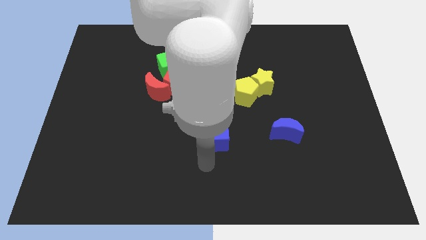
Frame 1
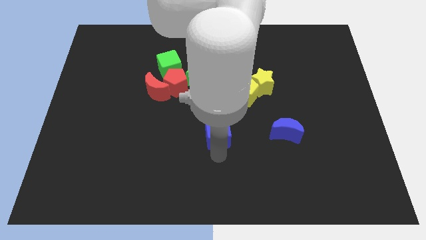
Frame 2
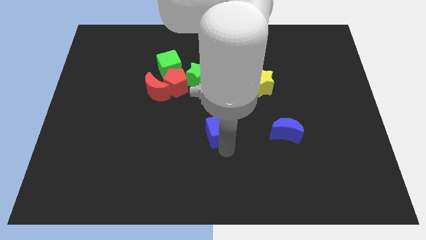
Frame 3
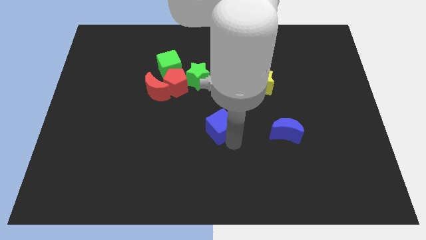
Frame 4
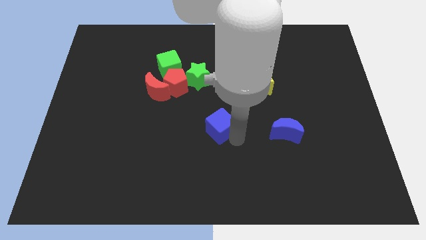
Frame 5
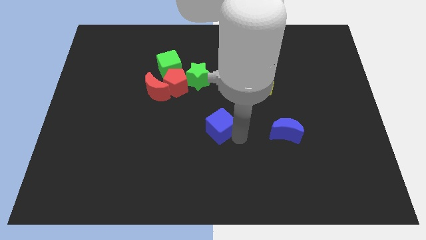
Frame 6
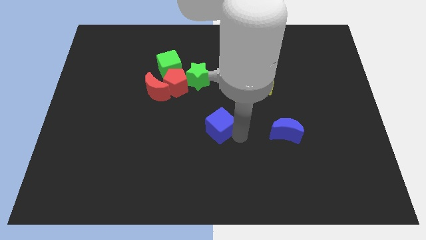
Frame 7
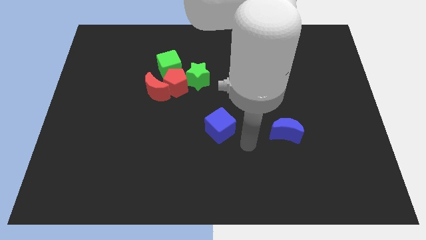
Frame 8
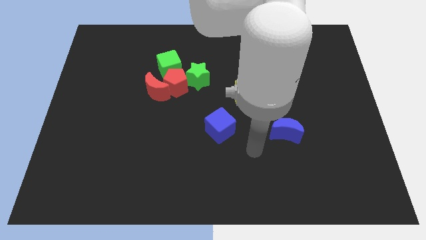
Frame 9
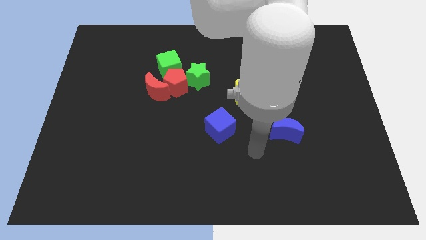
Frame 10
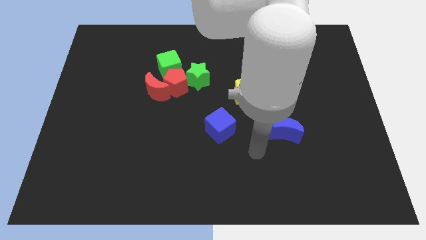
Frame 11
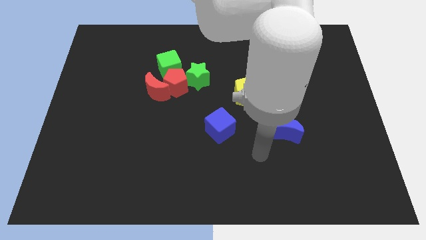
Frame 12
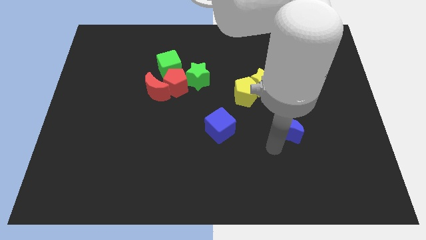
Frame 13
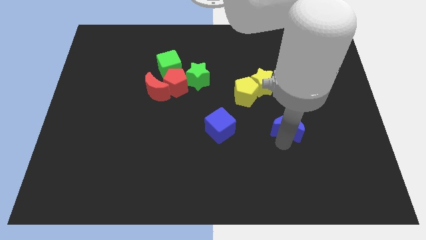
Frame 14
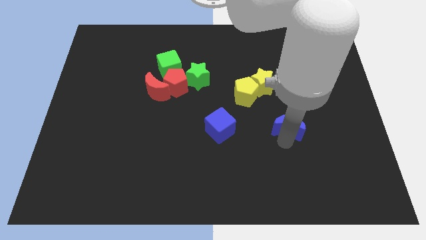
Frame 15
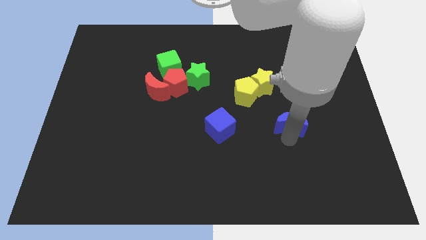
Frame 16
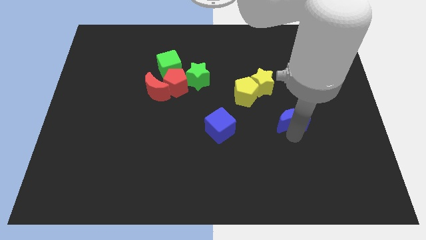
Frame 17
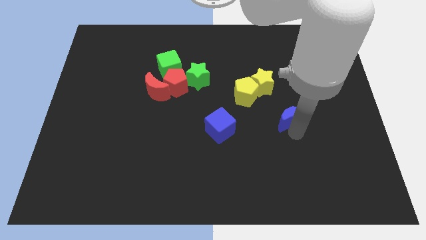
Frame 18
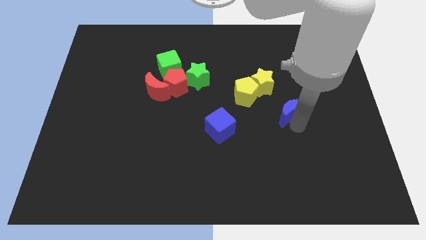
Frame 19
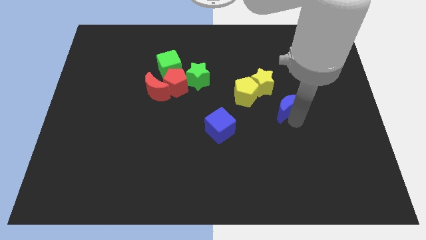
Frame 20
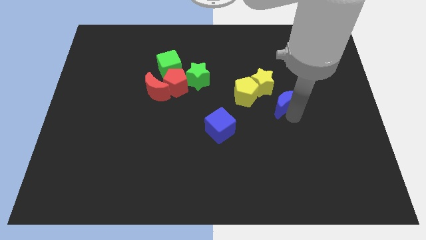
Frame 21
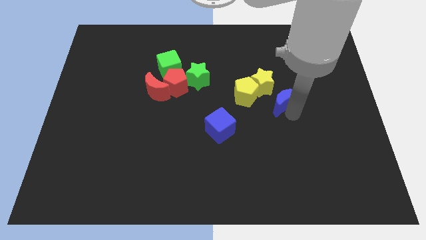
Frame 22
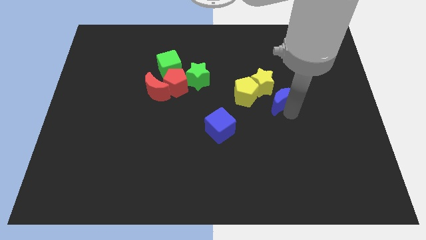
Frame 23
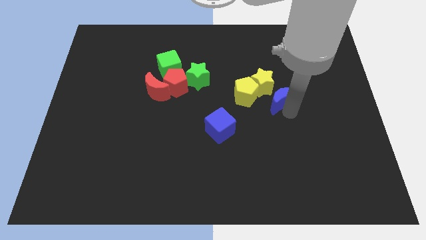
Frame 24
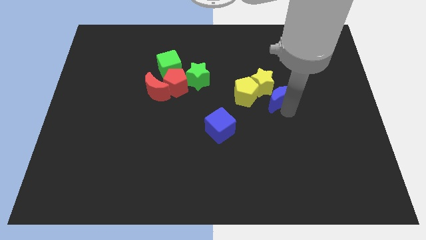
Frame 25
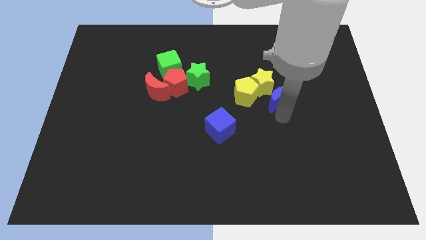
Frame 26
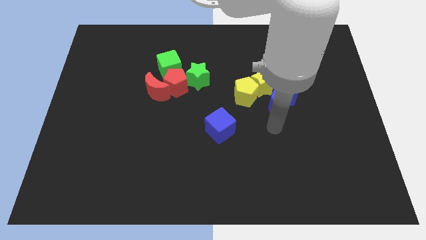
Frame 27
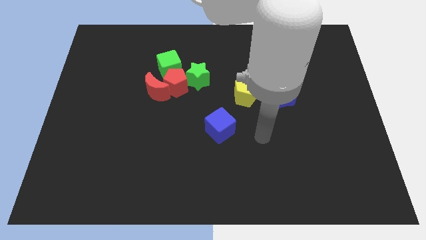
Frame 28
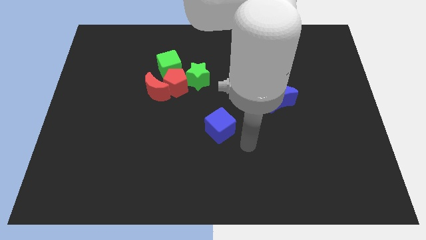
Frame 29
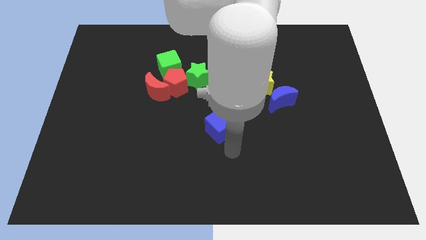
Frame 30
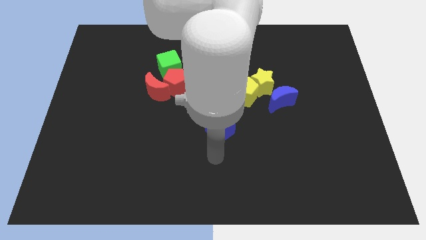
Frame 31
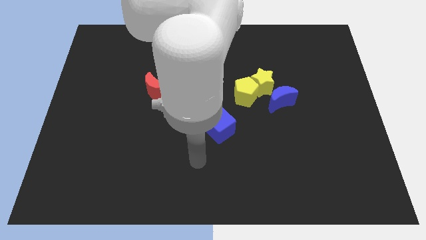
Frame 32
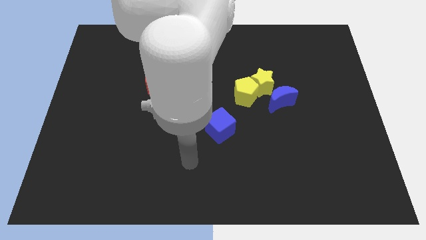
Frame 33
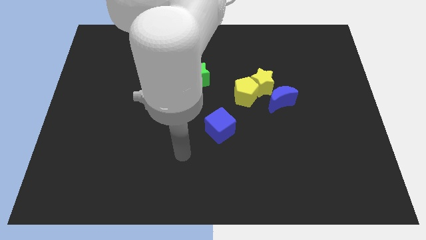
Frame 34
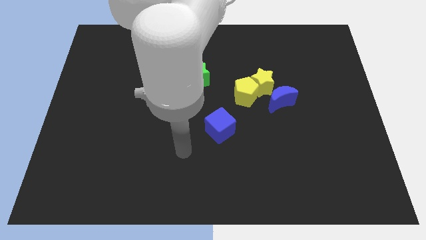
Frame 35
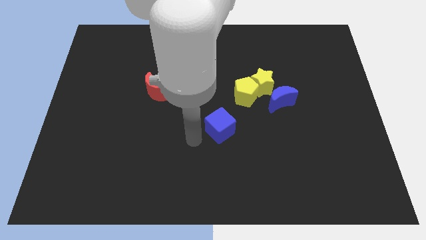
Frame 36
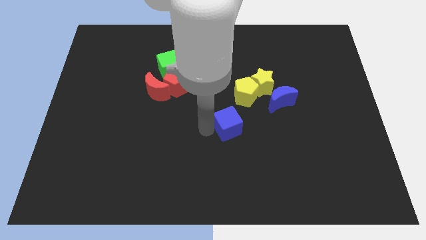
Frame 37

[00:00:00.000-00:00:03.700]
place the blue crescent to the bottom right of the yellow star

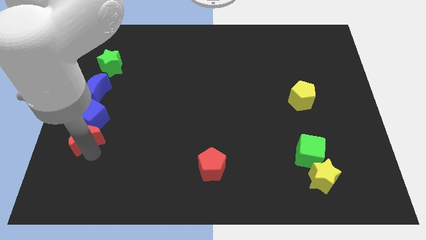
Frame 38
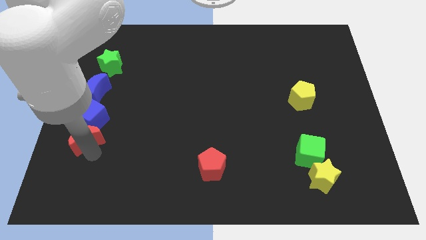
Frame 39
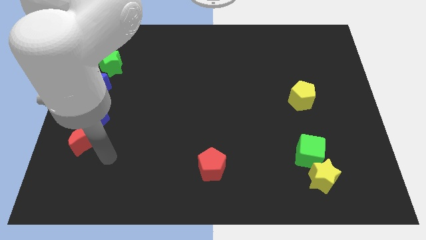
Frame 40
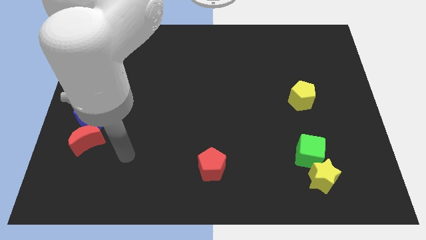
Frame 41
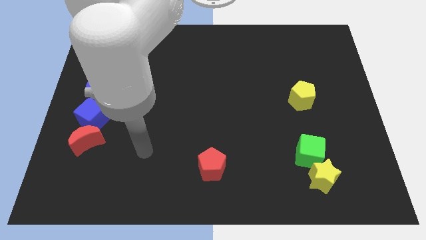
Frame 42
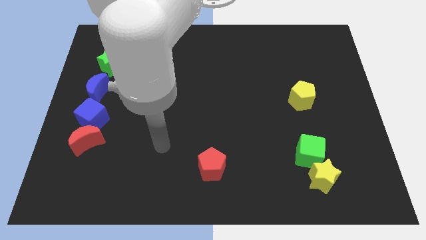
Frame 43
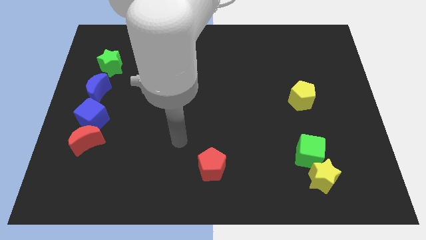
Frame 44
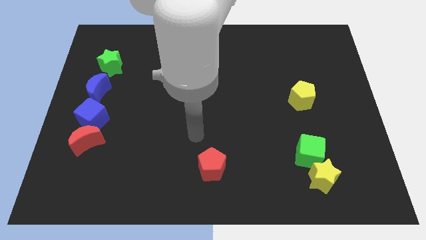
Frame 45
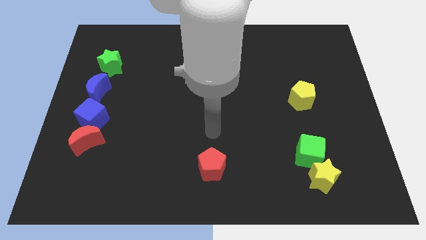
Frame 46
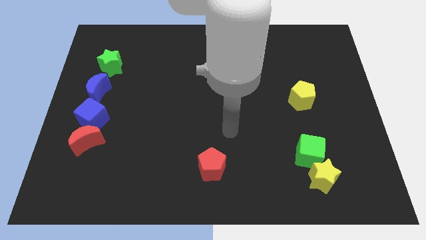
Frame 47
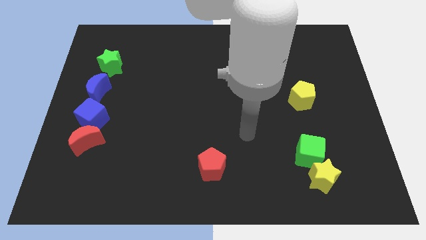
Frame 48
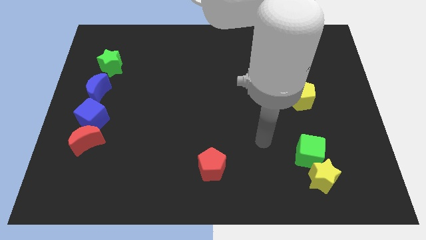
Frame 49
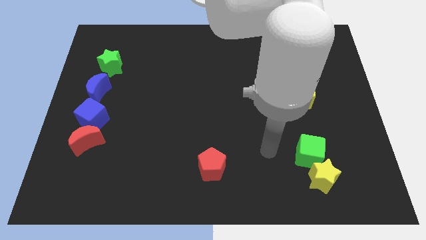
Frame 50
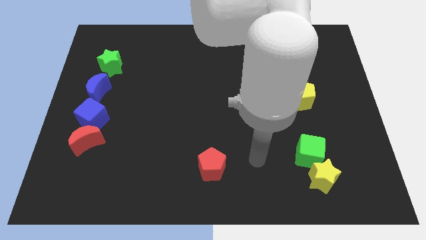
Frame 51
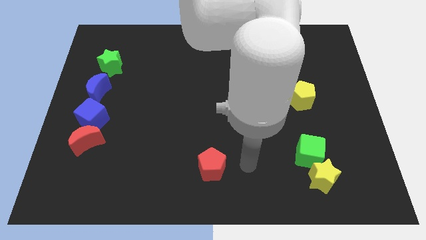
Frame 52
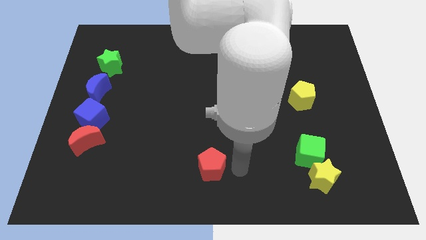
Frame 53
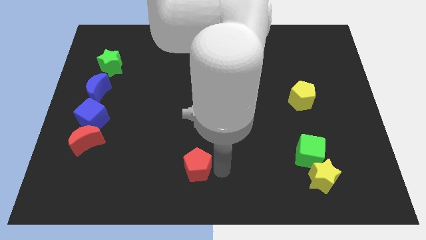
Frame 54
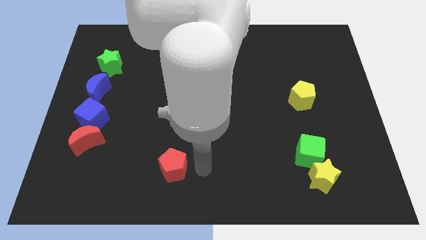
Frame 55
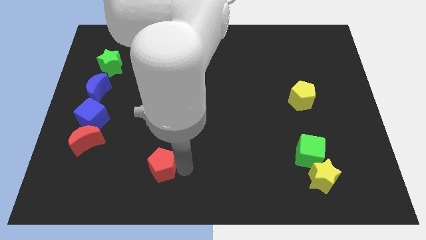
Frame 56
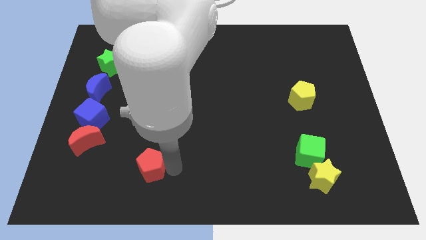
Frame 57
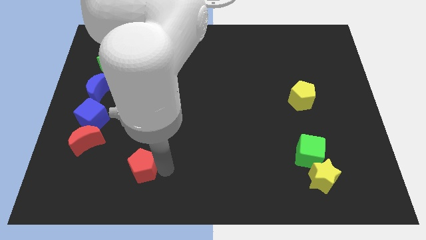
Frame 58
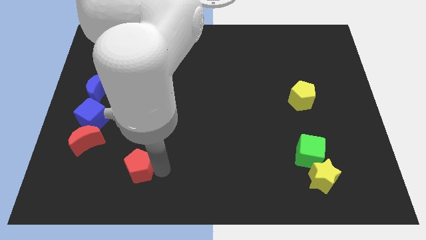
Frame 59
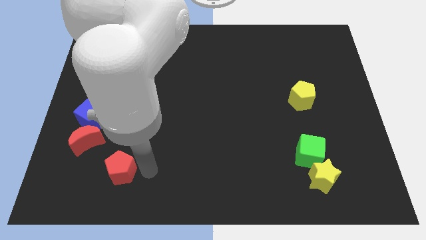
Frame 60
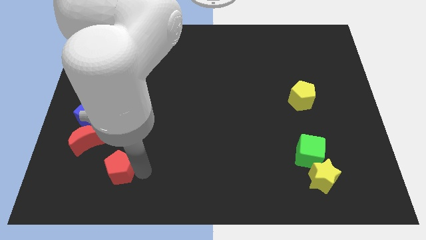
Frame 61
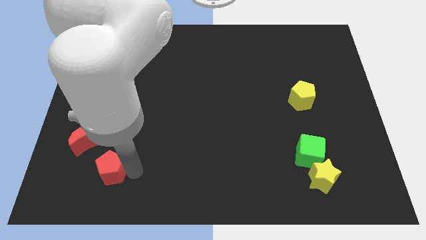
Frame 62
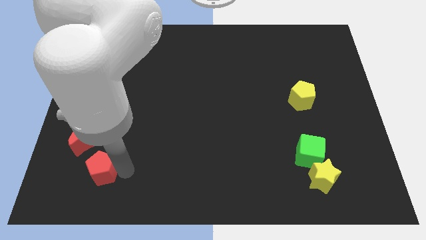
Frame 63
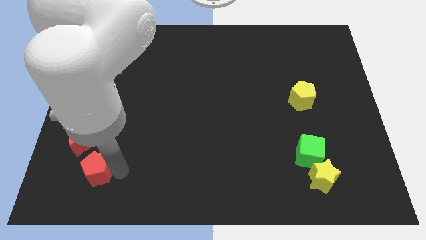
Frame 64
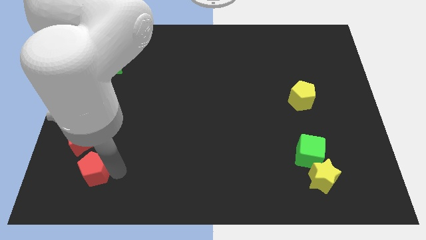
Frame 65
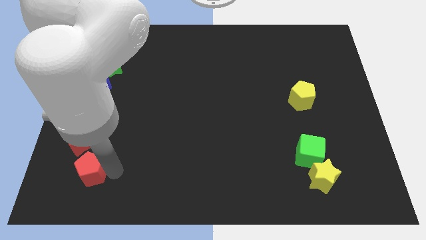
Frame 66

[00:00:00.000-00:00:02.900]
place red pentagon vertical to other blocks

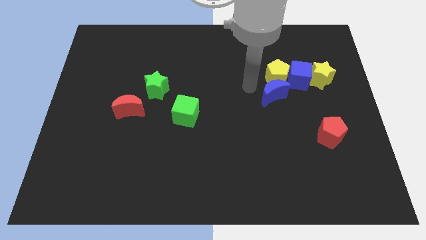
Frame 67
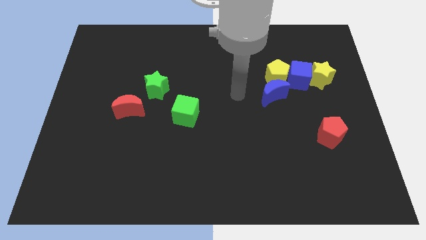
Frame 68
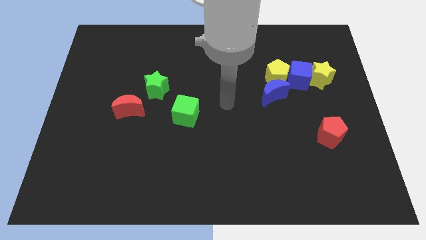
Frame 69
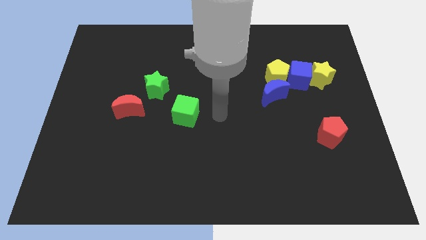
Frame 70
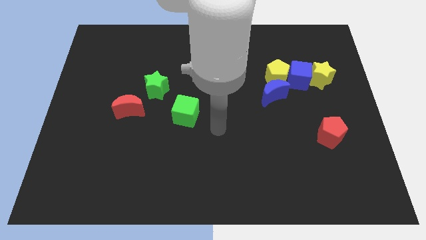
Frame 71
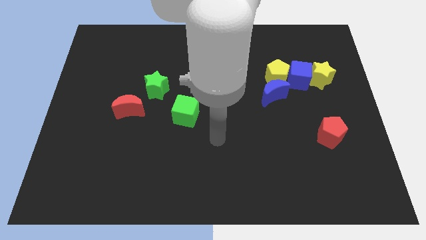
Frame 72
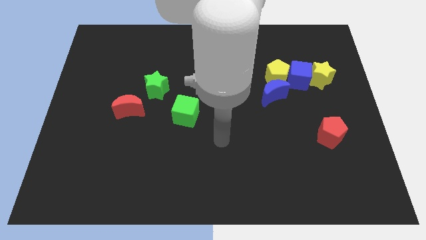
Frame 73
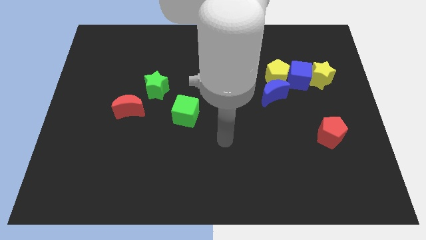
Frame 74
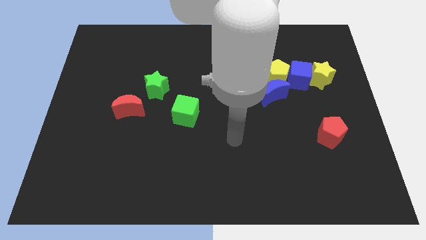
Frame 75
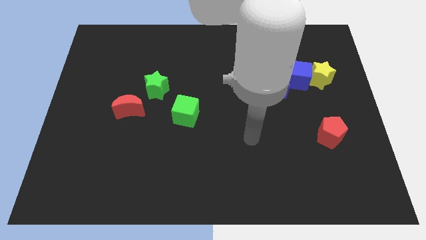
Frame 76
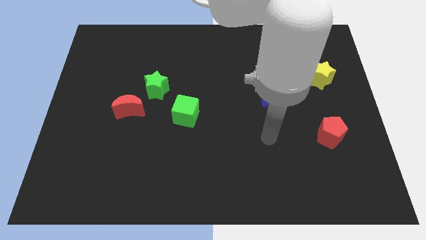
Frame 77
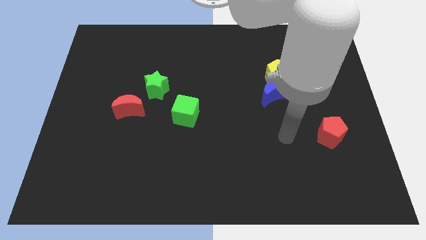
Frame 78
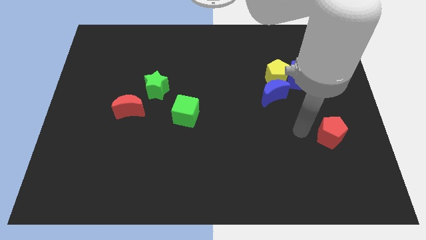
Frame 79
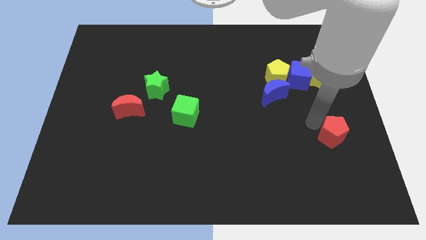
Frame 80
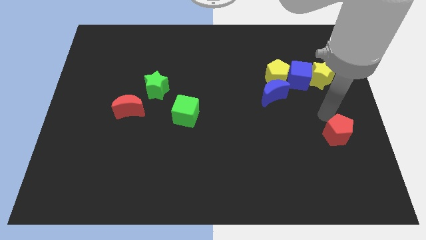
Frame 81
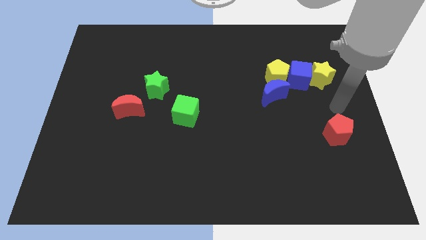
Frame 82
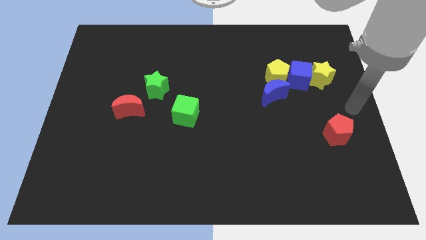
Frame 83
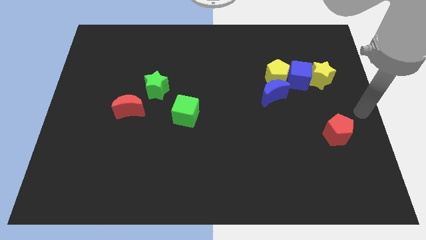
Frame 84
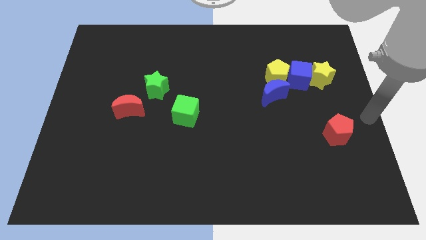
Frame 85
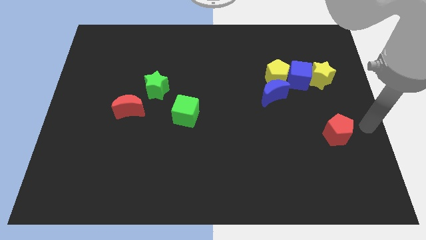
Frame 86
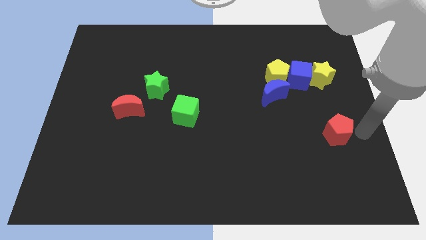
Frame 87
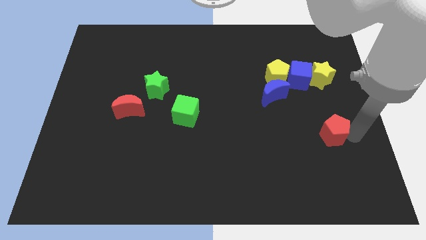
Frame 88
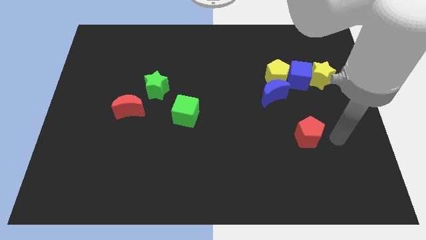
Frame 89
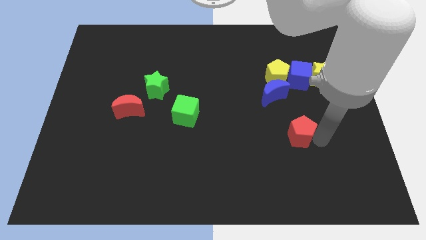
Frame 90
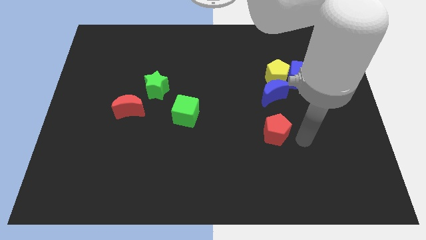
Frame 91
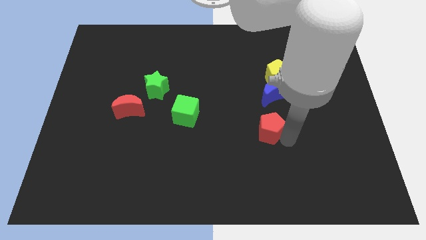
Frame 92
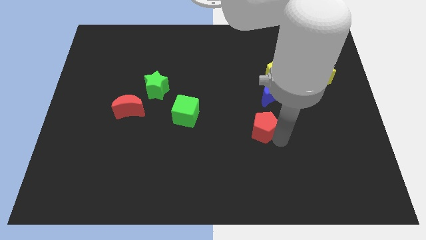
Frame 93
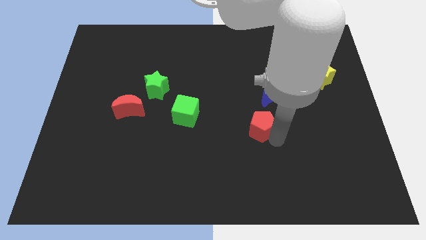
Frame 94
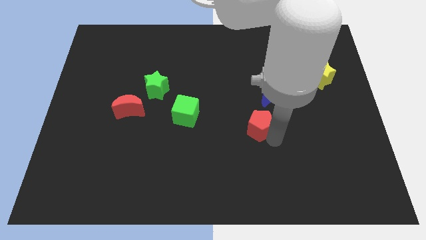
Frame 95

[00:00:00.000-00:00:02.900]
place the red pentagon at the bottom left side of blue moon
